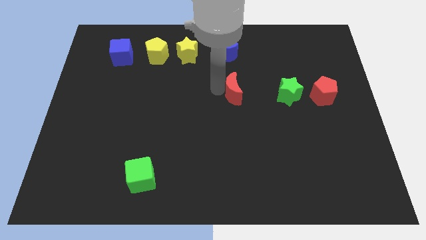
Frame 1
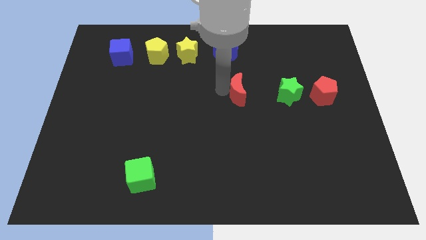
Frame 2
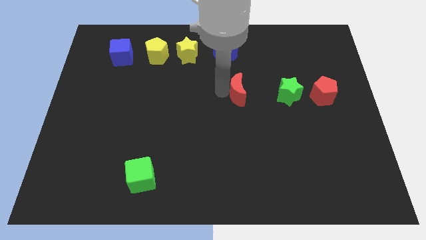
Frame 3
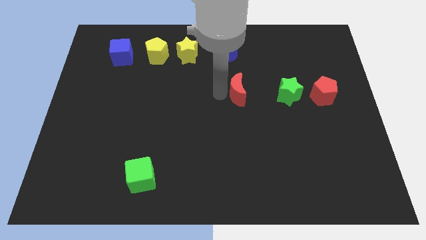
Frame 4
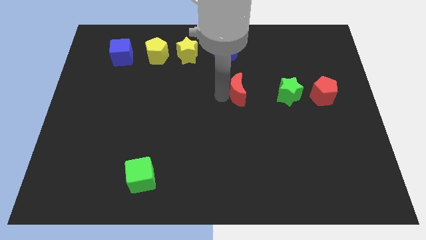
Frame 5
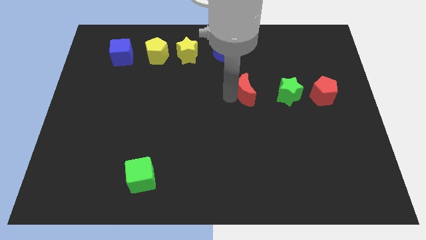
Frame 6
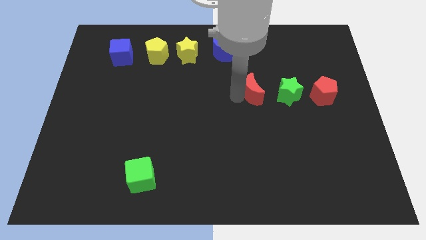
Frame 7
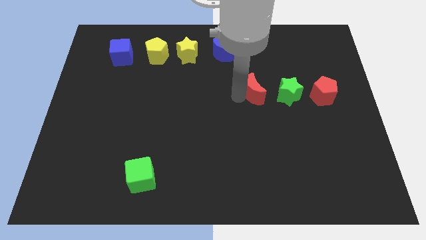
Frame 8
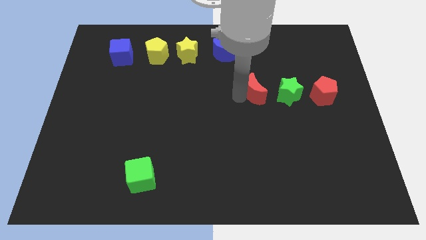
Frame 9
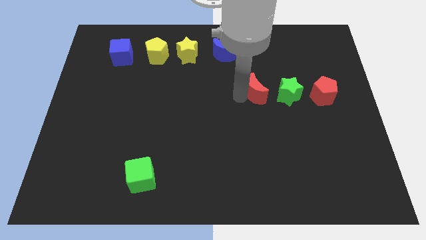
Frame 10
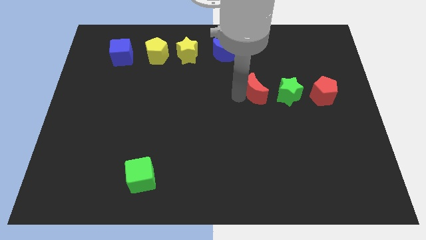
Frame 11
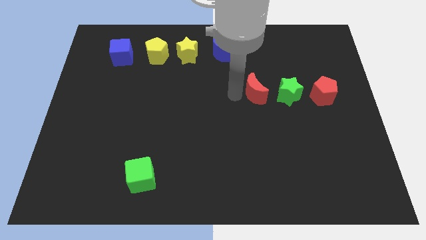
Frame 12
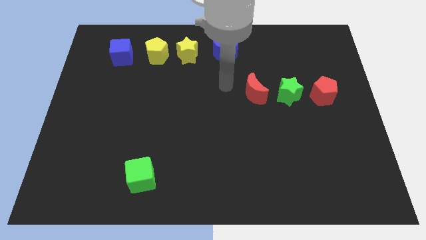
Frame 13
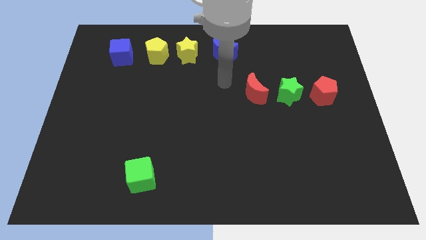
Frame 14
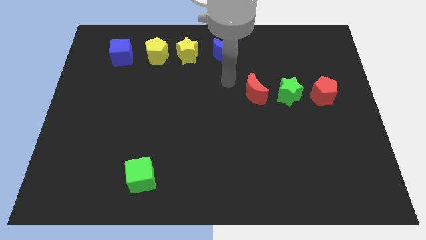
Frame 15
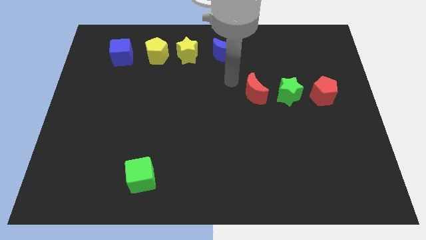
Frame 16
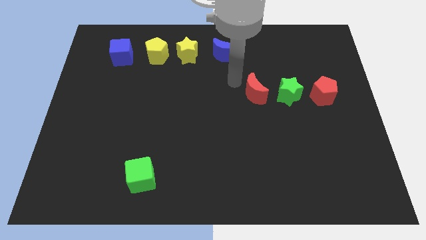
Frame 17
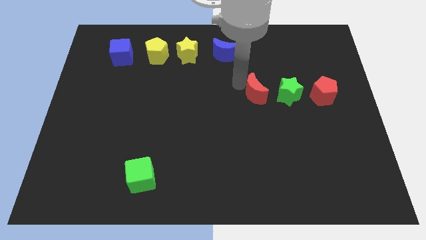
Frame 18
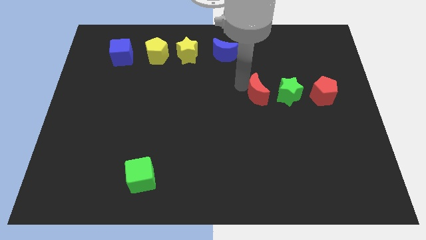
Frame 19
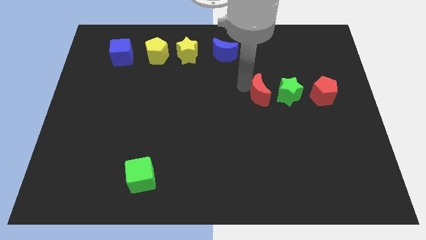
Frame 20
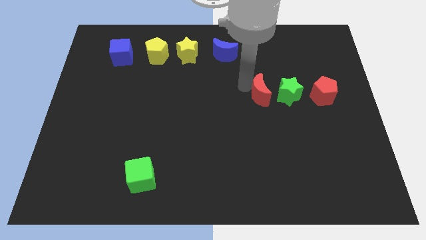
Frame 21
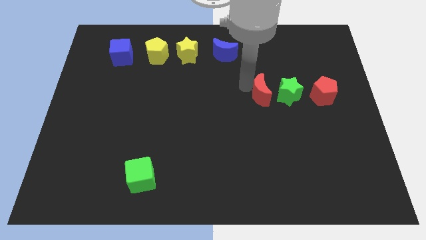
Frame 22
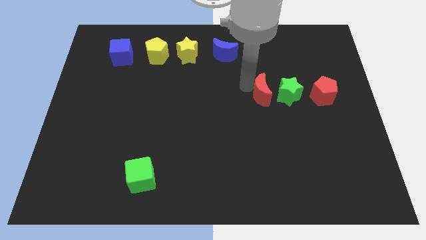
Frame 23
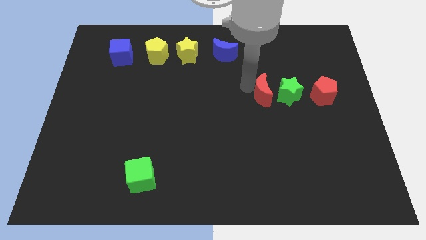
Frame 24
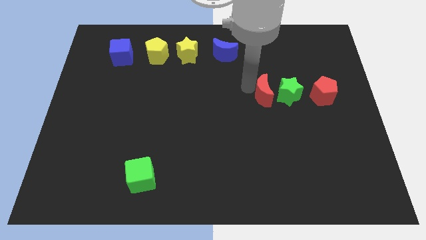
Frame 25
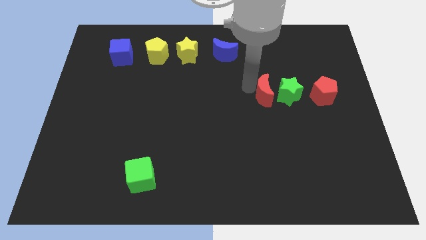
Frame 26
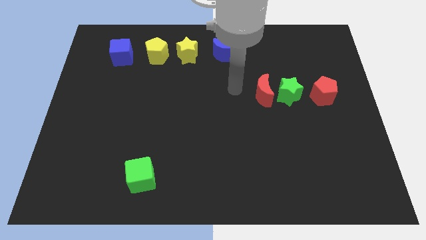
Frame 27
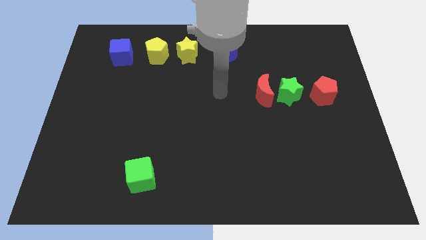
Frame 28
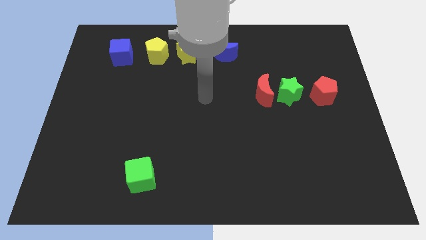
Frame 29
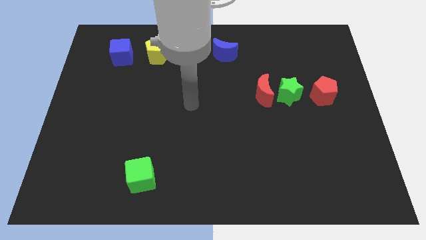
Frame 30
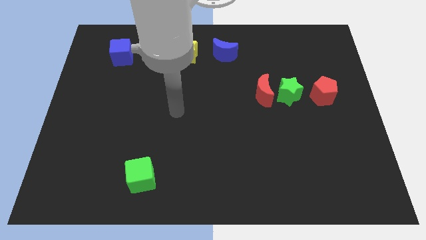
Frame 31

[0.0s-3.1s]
push the red crescent towards the green star

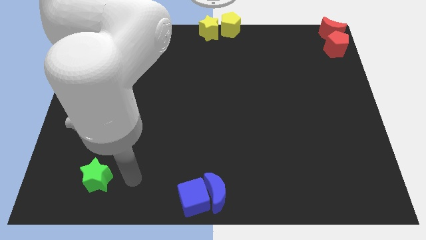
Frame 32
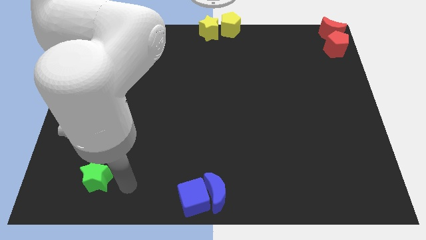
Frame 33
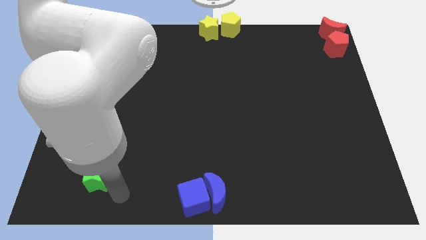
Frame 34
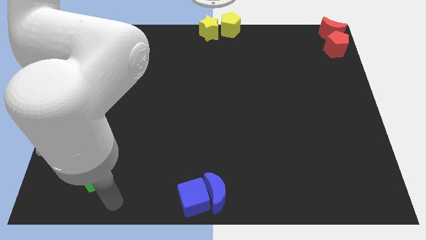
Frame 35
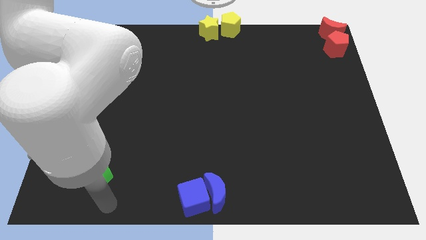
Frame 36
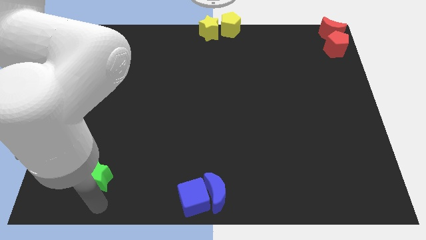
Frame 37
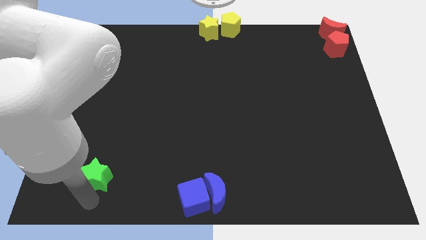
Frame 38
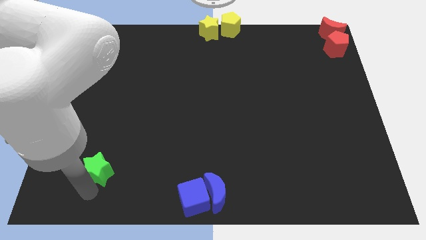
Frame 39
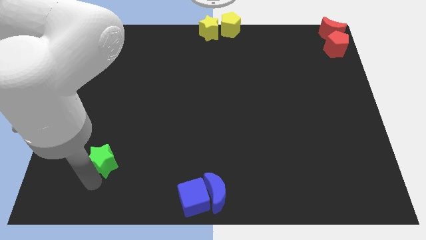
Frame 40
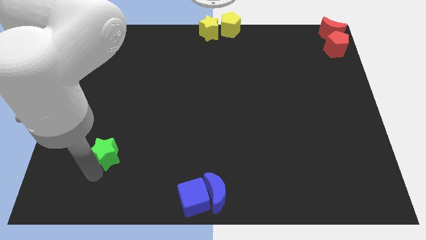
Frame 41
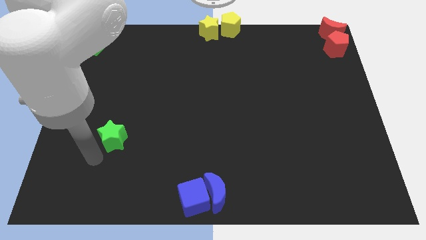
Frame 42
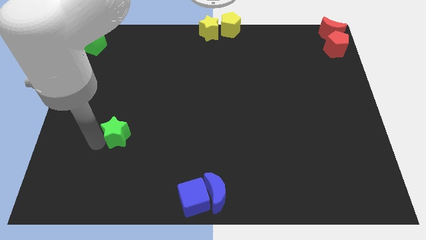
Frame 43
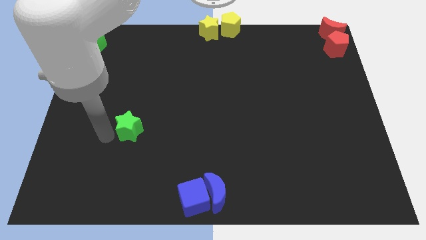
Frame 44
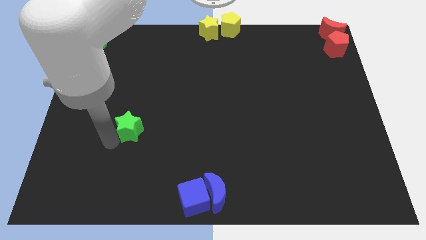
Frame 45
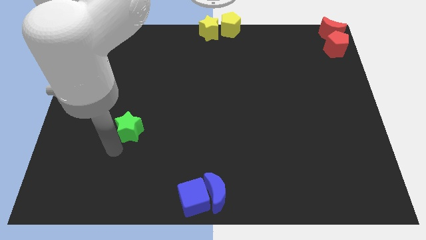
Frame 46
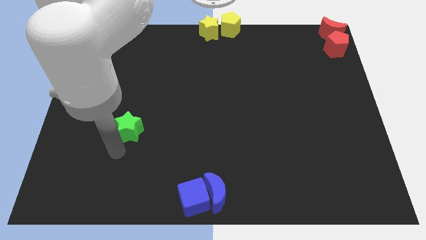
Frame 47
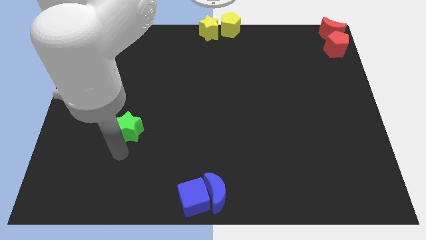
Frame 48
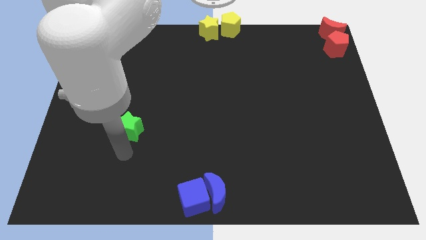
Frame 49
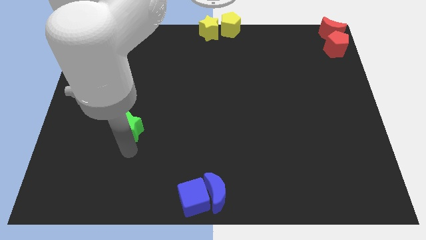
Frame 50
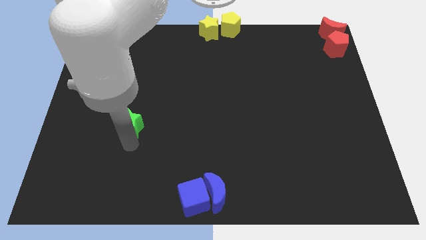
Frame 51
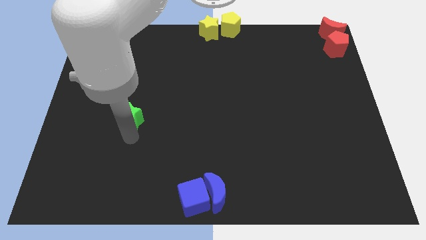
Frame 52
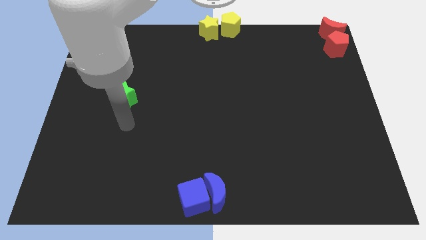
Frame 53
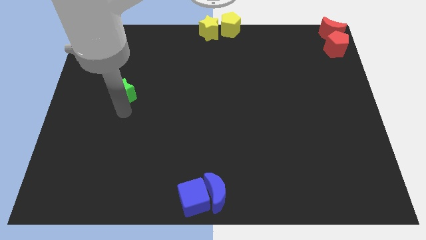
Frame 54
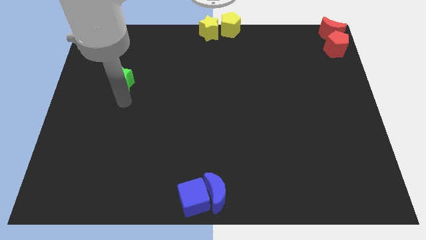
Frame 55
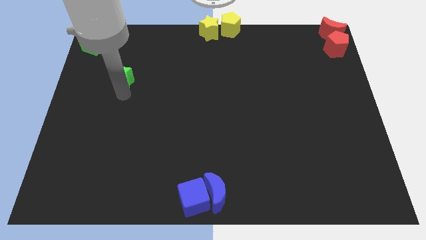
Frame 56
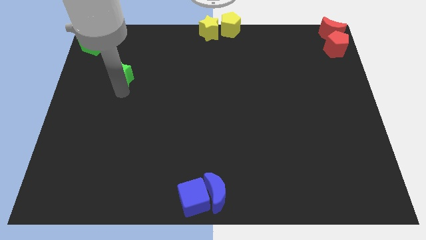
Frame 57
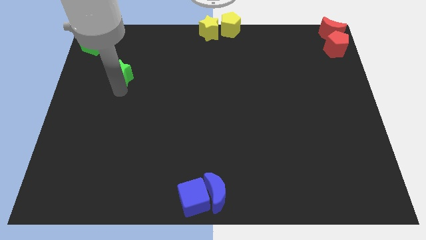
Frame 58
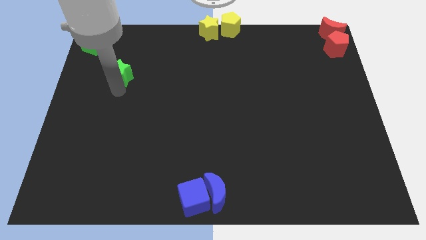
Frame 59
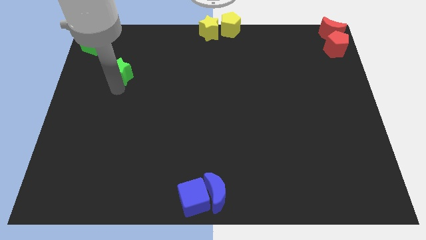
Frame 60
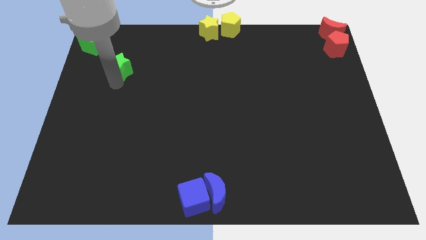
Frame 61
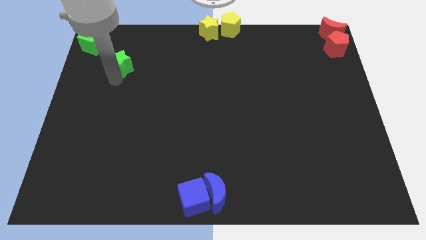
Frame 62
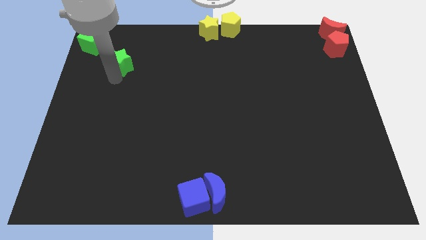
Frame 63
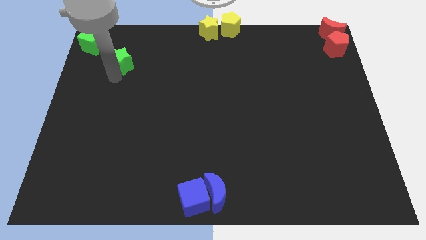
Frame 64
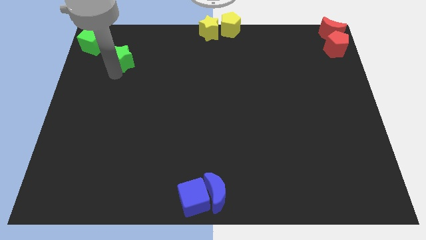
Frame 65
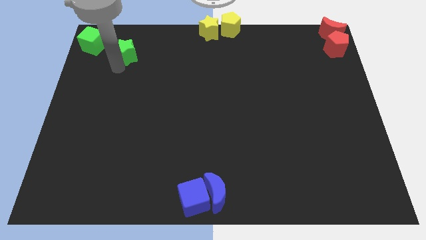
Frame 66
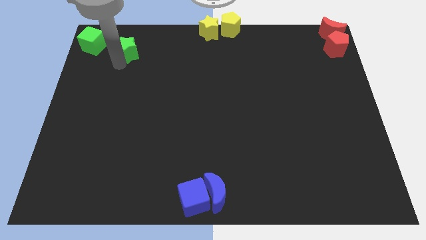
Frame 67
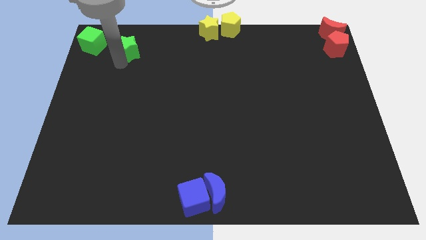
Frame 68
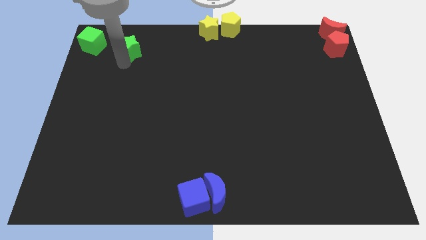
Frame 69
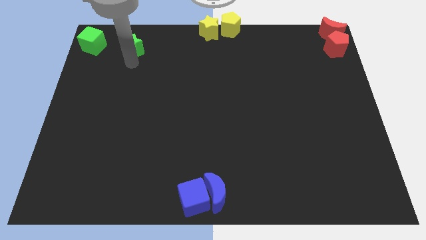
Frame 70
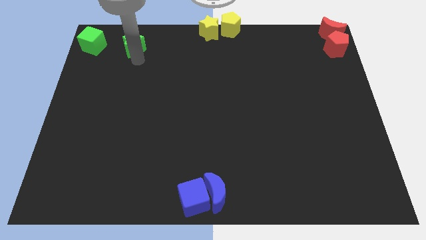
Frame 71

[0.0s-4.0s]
place the green star to the right side of the green cube

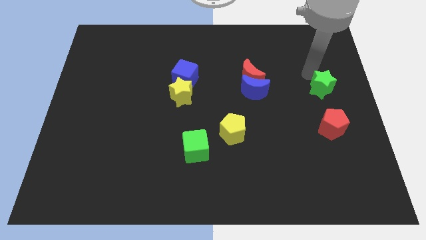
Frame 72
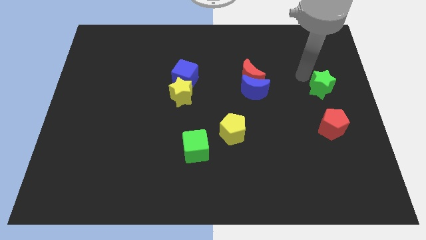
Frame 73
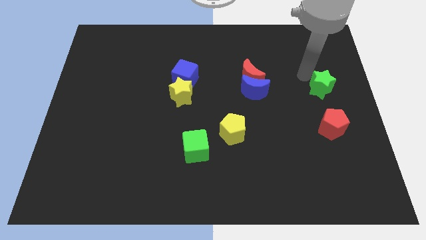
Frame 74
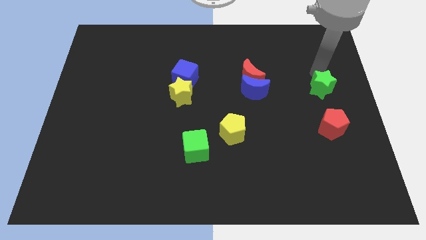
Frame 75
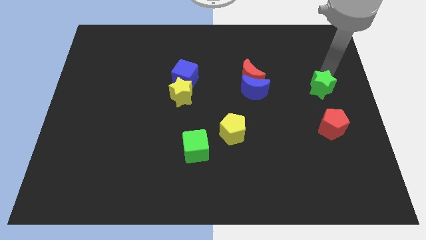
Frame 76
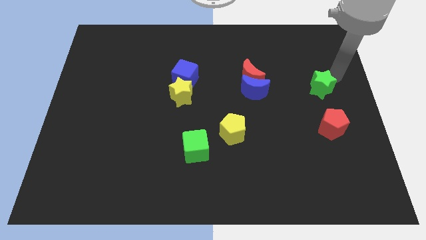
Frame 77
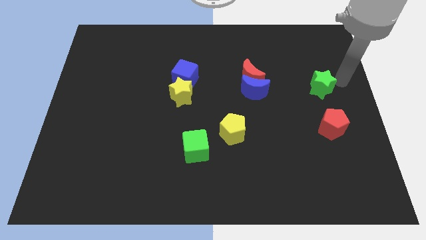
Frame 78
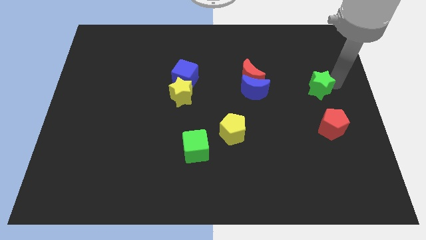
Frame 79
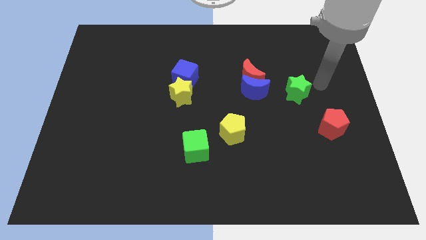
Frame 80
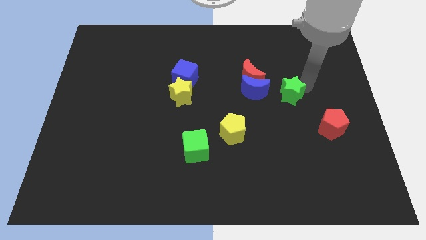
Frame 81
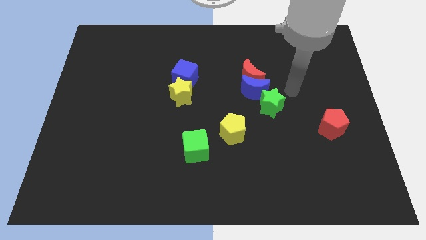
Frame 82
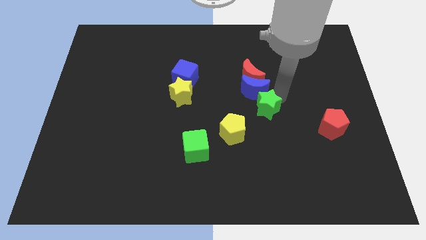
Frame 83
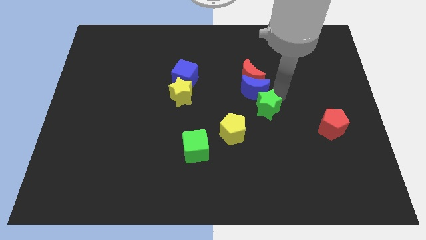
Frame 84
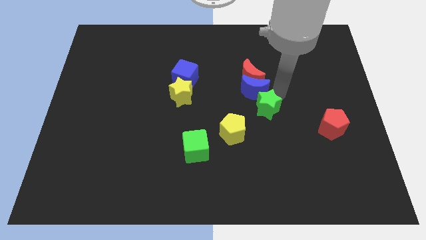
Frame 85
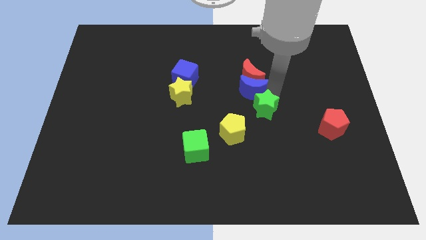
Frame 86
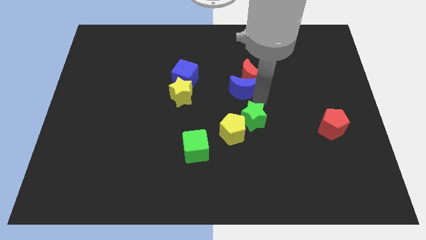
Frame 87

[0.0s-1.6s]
push the green star to the bottom of the blue crescent

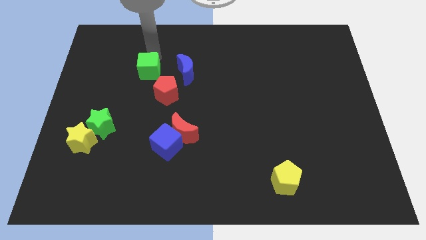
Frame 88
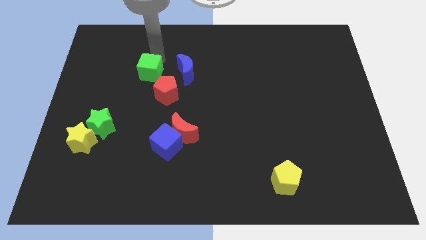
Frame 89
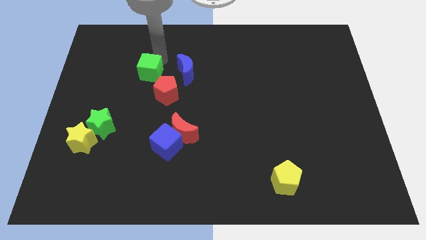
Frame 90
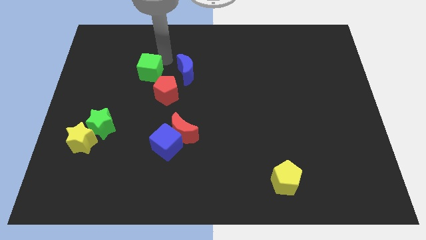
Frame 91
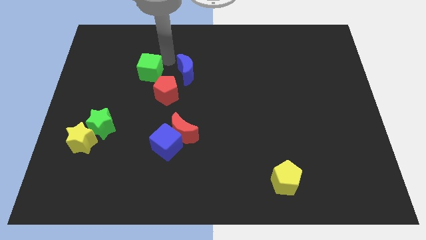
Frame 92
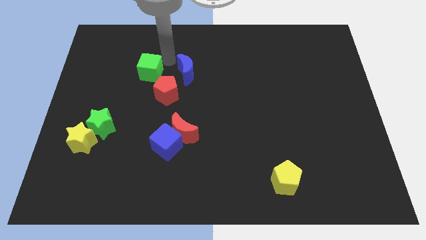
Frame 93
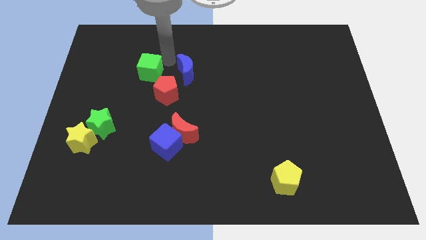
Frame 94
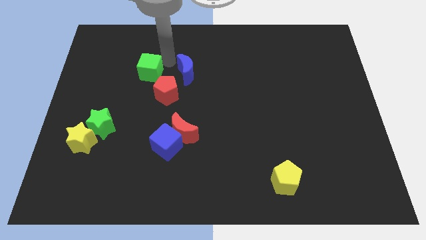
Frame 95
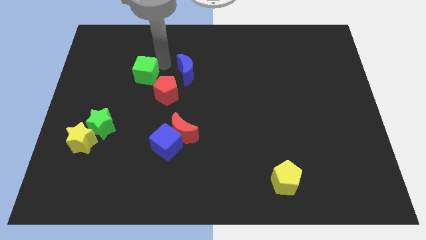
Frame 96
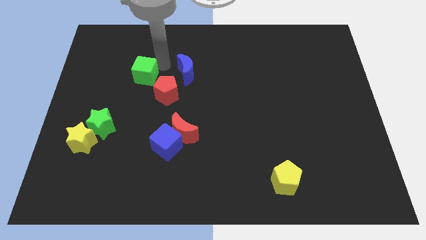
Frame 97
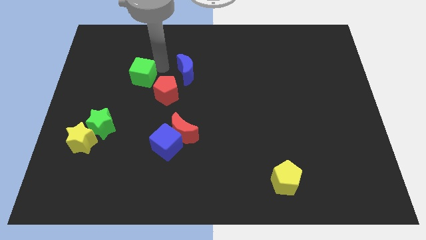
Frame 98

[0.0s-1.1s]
drag the green cube diagonally top left to red pentagon
